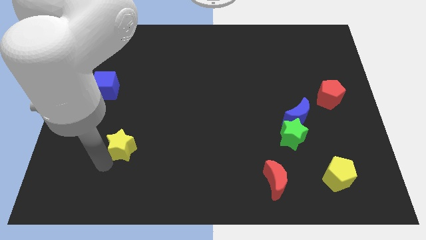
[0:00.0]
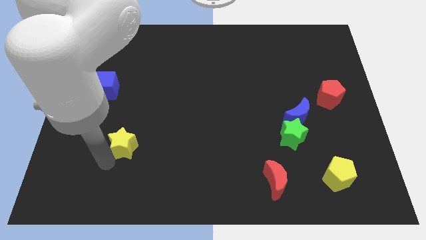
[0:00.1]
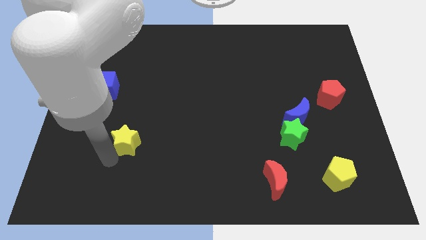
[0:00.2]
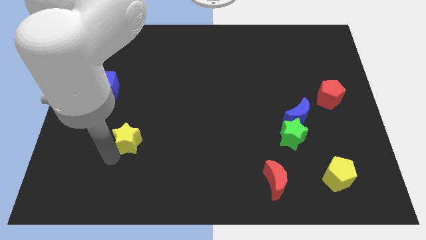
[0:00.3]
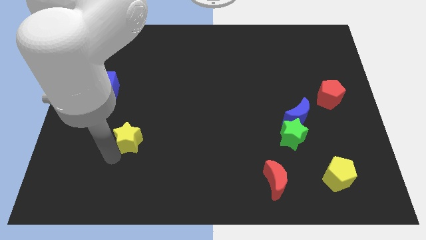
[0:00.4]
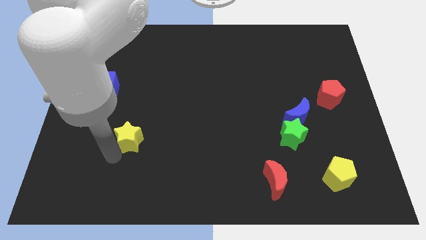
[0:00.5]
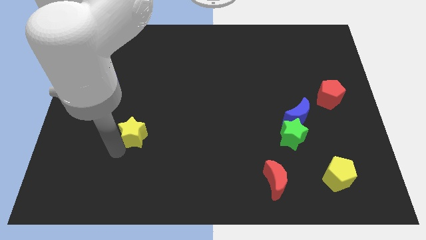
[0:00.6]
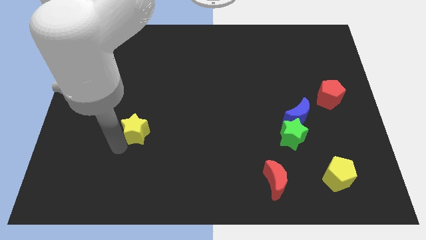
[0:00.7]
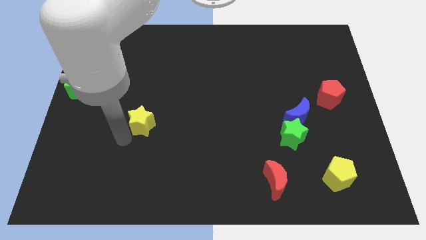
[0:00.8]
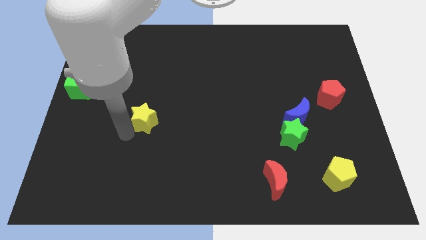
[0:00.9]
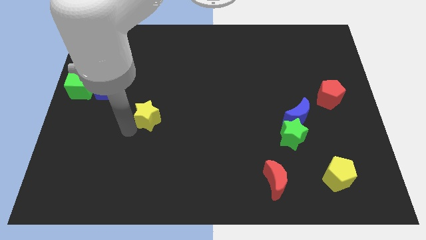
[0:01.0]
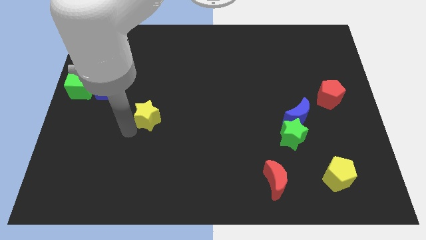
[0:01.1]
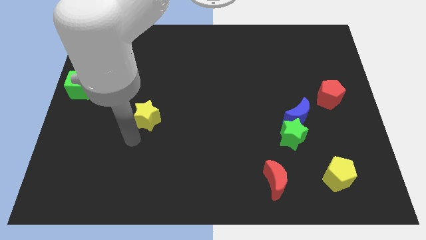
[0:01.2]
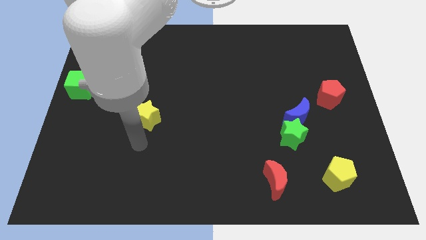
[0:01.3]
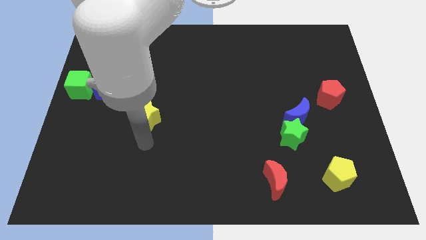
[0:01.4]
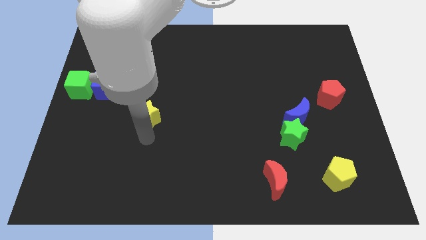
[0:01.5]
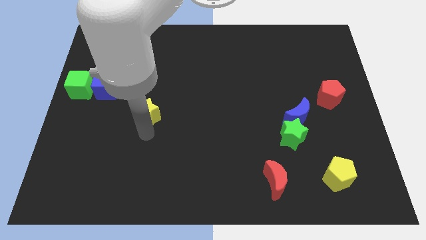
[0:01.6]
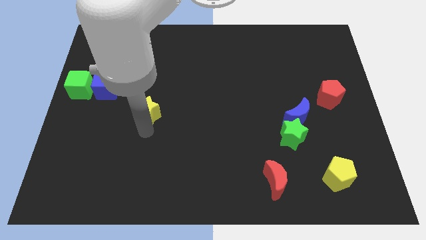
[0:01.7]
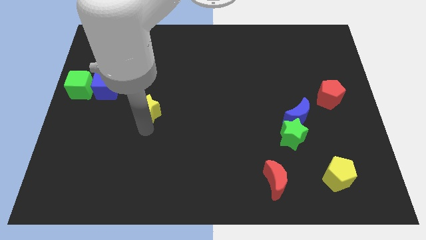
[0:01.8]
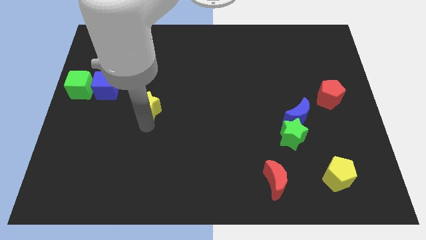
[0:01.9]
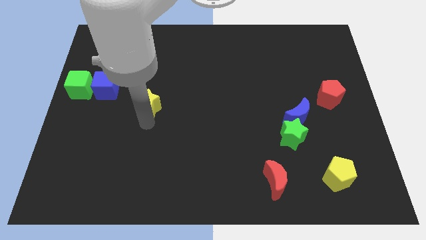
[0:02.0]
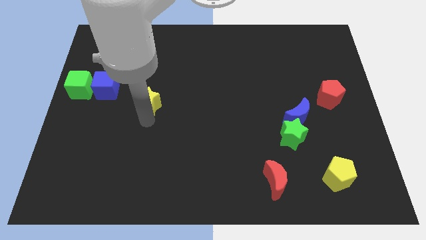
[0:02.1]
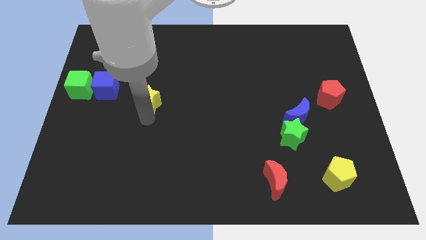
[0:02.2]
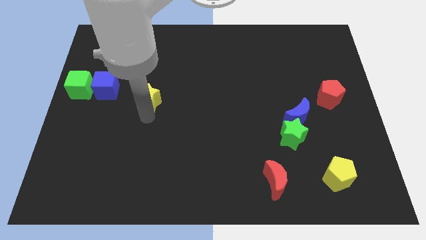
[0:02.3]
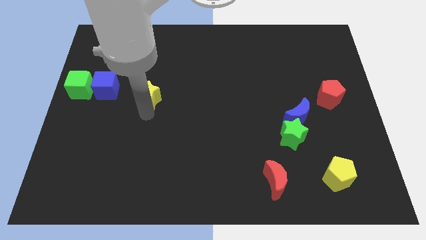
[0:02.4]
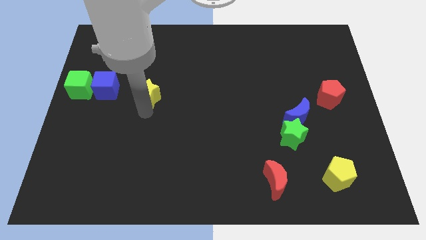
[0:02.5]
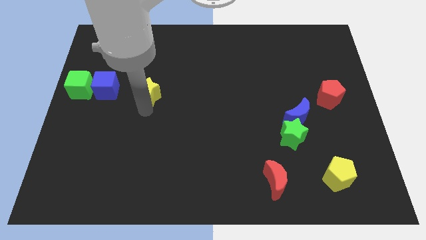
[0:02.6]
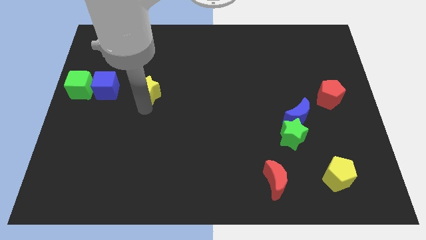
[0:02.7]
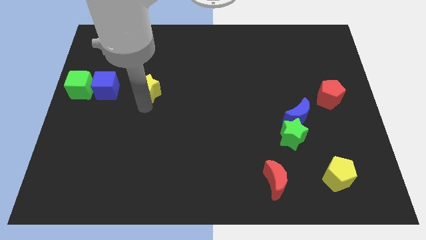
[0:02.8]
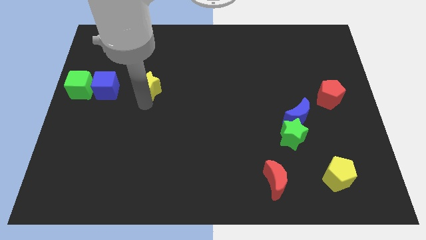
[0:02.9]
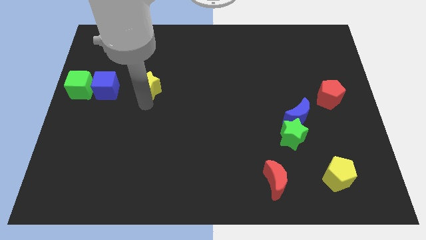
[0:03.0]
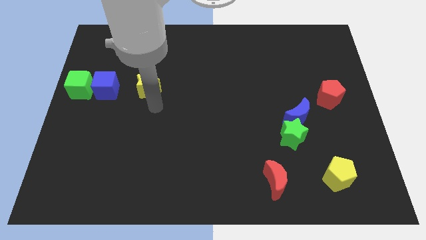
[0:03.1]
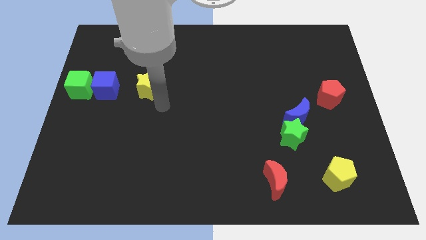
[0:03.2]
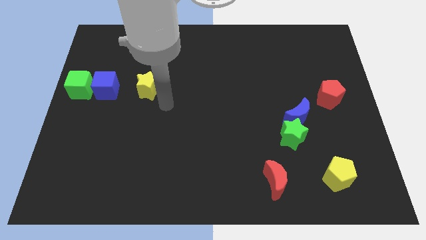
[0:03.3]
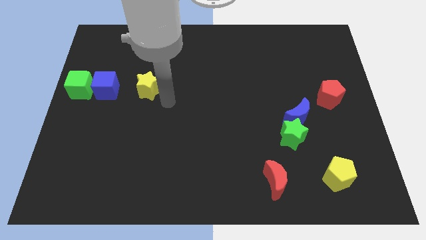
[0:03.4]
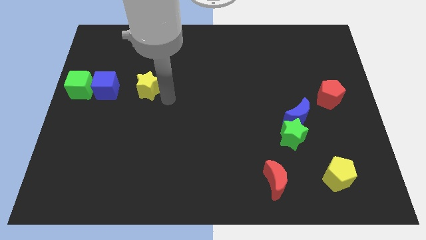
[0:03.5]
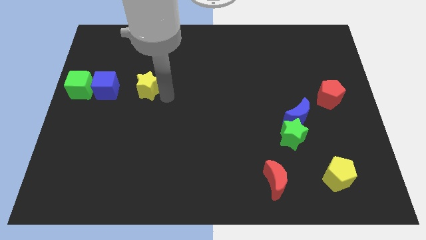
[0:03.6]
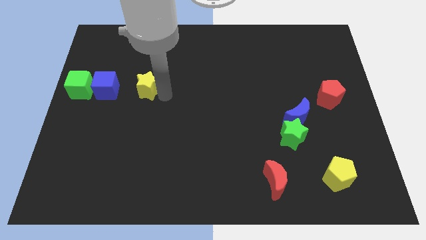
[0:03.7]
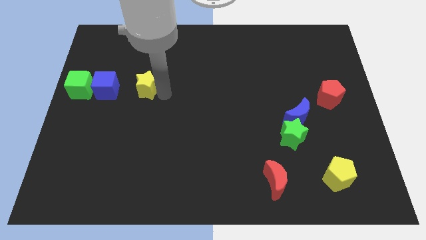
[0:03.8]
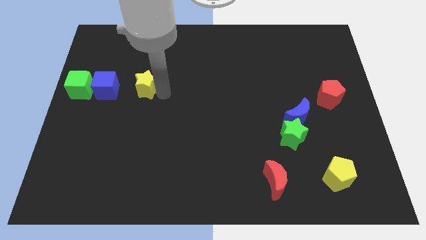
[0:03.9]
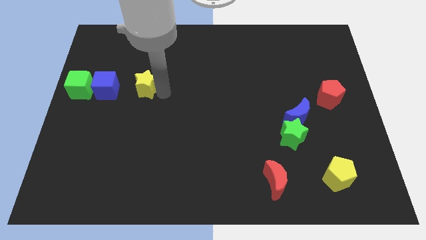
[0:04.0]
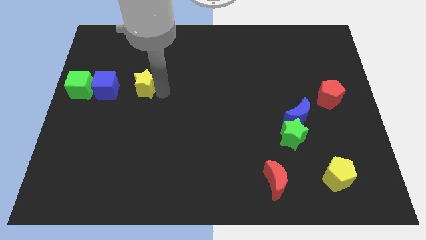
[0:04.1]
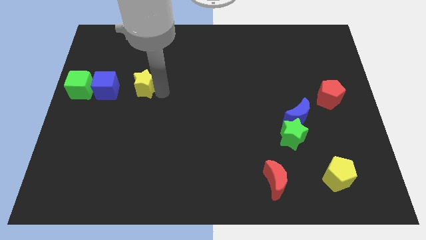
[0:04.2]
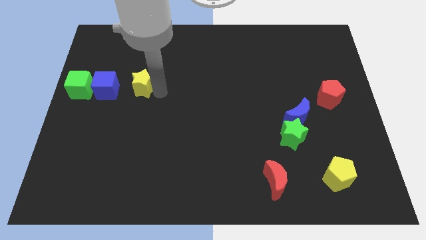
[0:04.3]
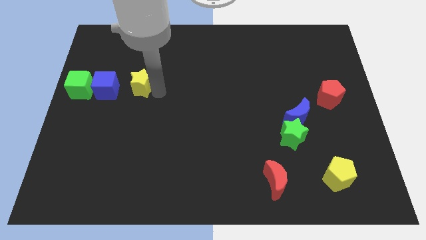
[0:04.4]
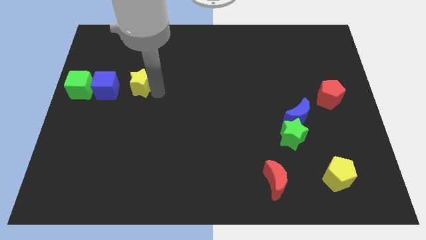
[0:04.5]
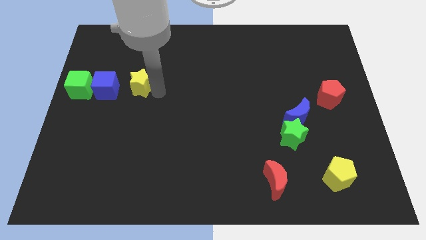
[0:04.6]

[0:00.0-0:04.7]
move the yellow star to the right of the blue cube

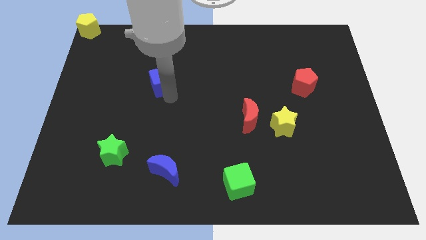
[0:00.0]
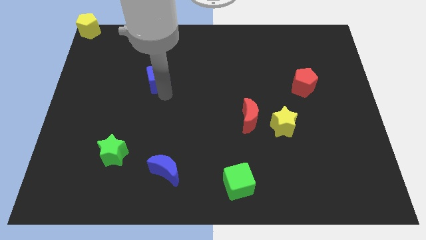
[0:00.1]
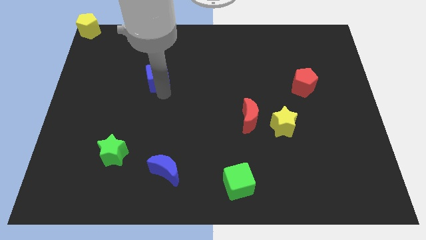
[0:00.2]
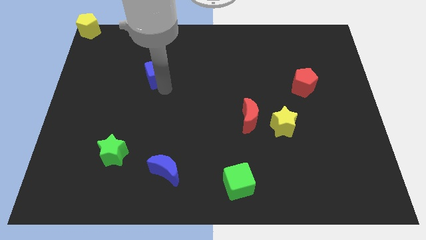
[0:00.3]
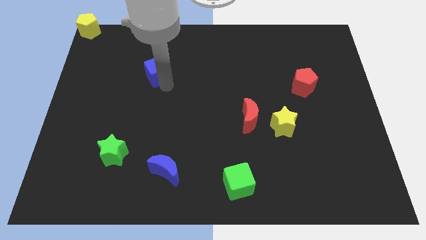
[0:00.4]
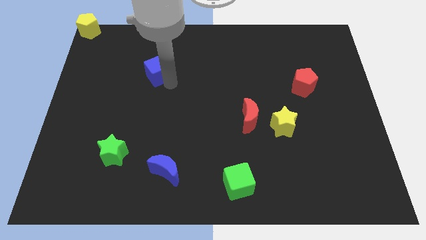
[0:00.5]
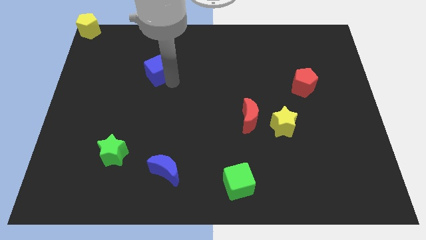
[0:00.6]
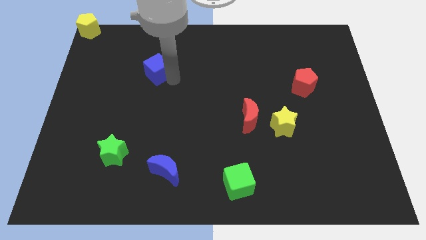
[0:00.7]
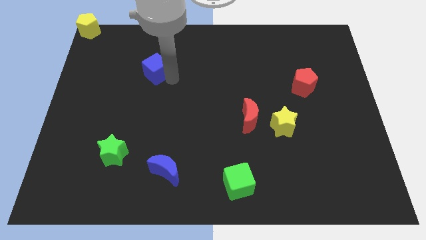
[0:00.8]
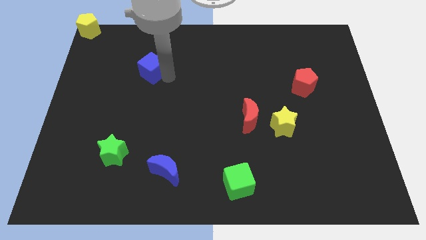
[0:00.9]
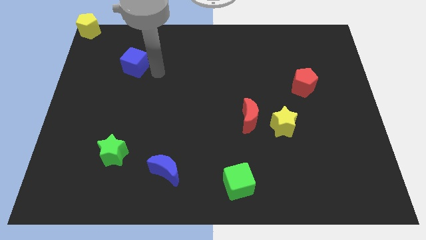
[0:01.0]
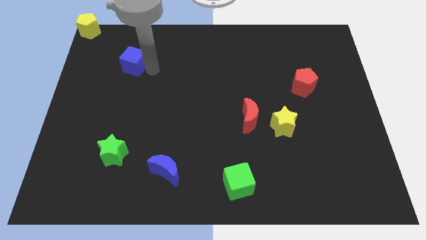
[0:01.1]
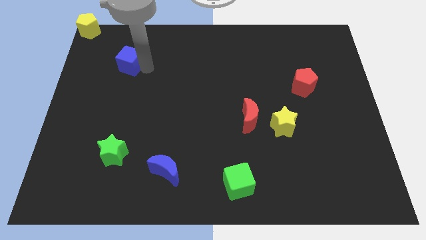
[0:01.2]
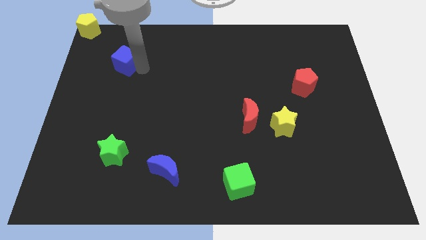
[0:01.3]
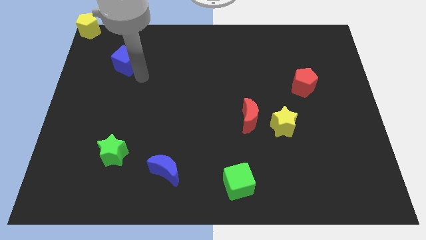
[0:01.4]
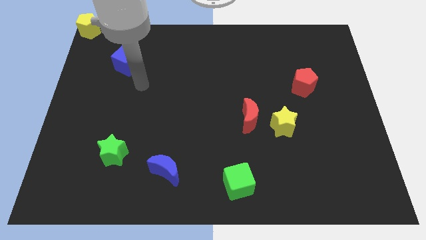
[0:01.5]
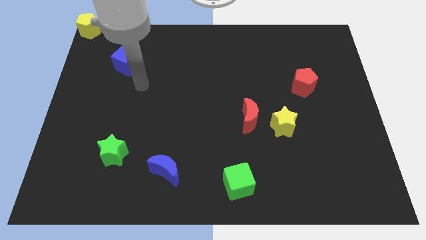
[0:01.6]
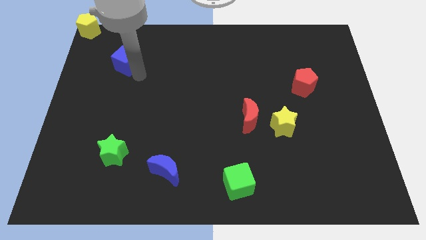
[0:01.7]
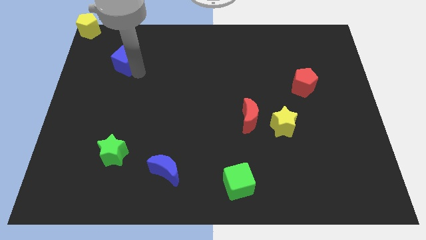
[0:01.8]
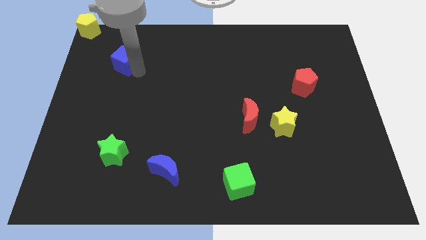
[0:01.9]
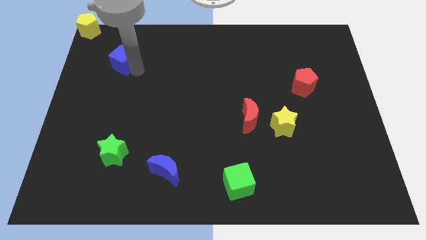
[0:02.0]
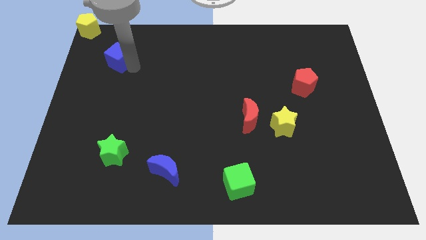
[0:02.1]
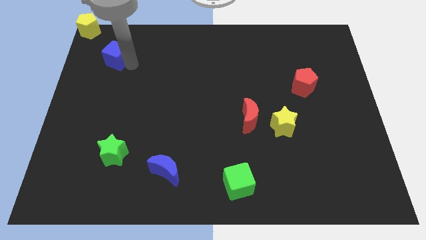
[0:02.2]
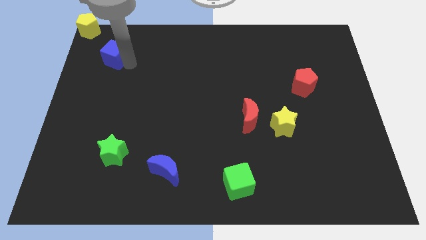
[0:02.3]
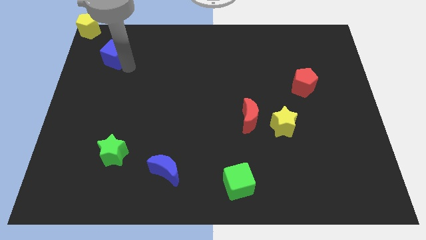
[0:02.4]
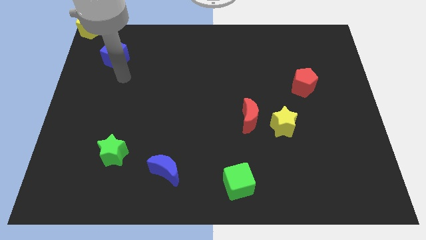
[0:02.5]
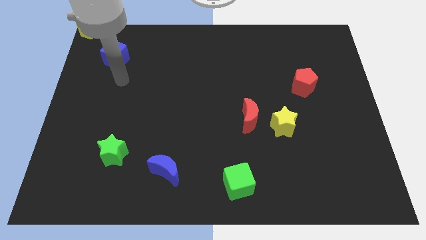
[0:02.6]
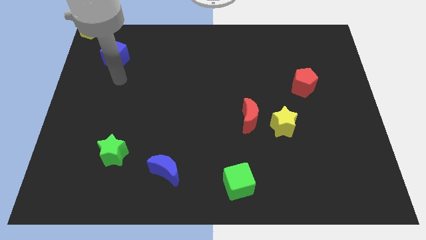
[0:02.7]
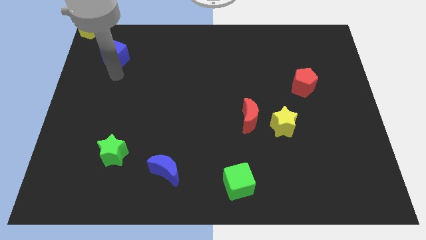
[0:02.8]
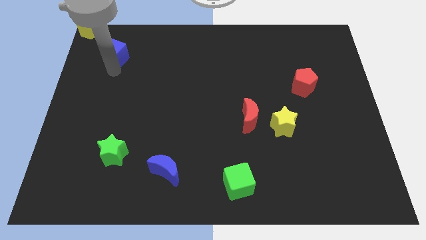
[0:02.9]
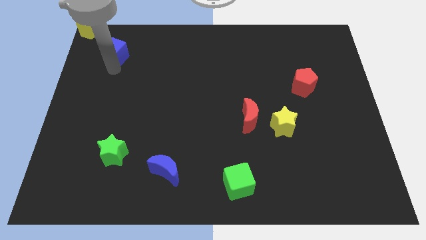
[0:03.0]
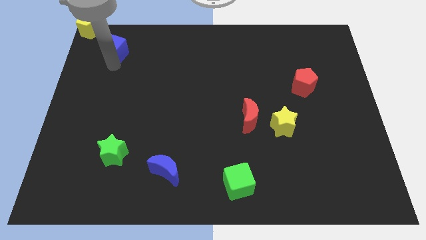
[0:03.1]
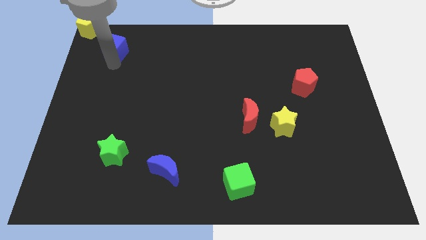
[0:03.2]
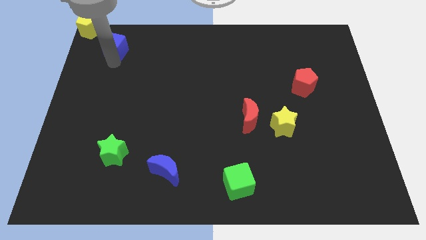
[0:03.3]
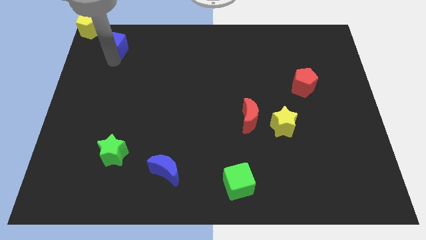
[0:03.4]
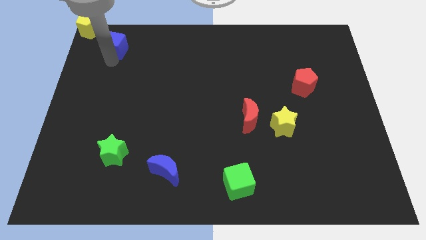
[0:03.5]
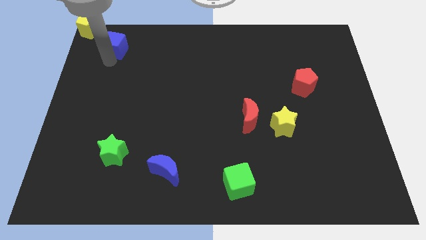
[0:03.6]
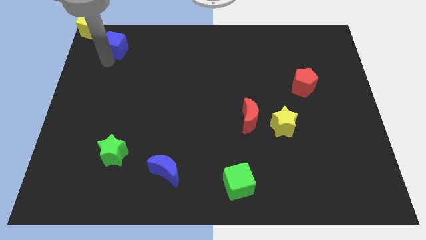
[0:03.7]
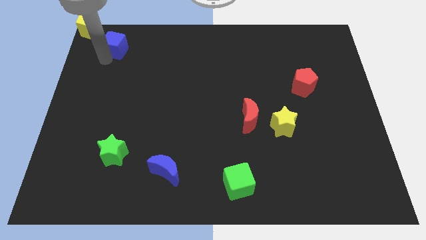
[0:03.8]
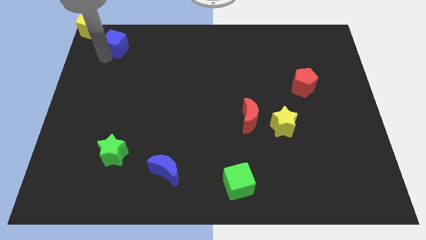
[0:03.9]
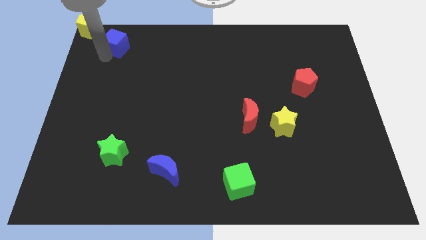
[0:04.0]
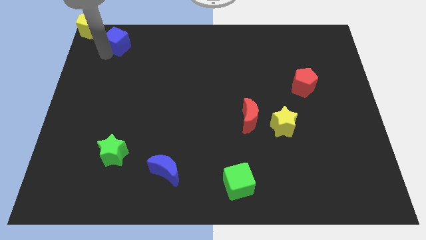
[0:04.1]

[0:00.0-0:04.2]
slide blue cube towards yellow pentagon
